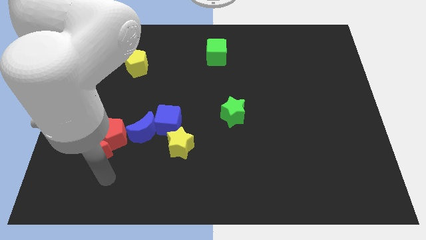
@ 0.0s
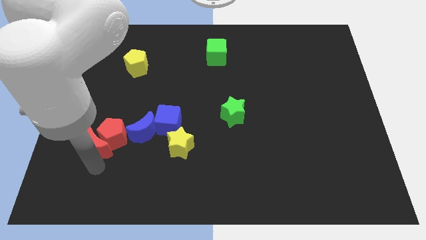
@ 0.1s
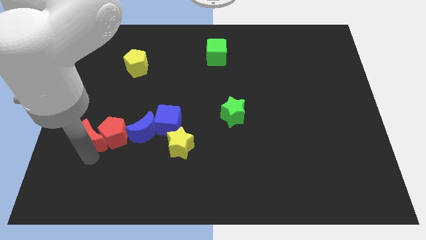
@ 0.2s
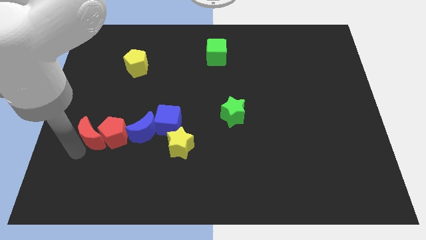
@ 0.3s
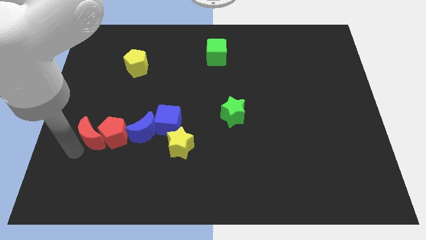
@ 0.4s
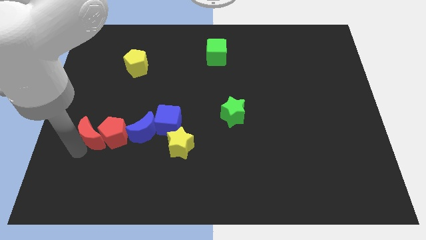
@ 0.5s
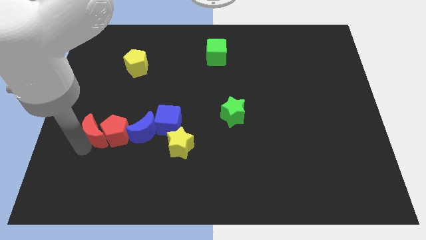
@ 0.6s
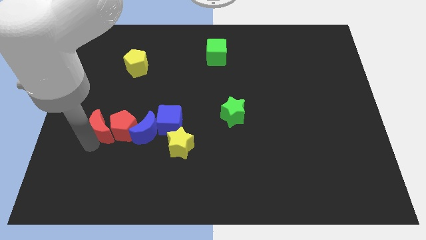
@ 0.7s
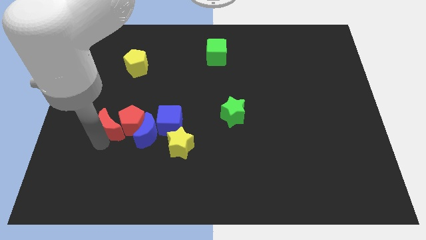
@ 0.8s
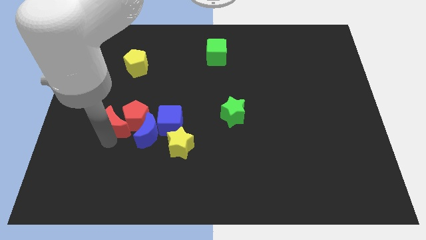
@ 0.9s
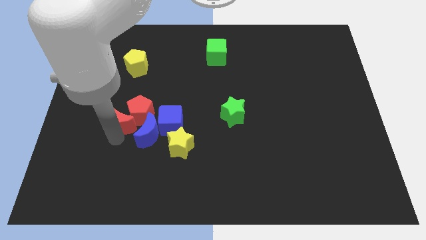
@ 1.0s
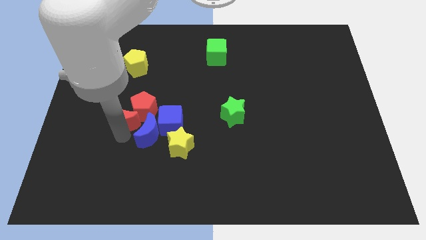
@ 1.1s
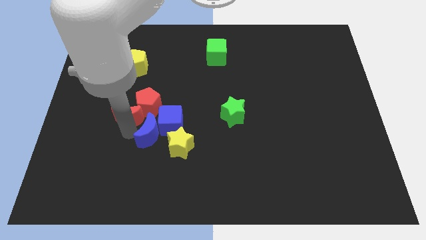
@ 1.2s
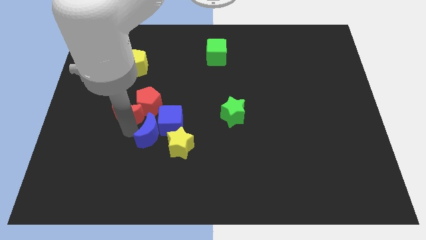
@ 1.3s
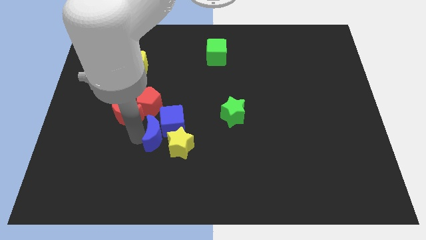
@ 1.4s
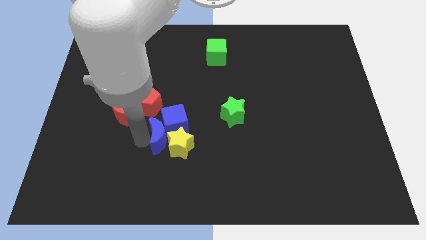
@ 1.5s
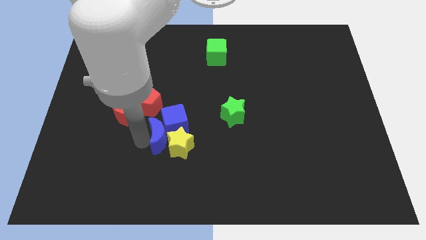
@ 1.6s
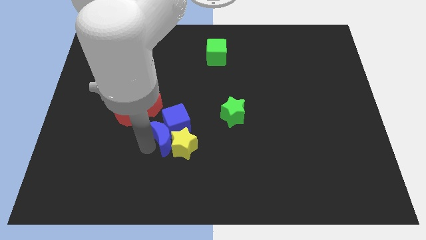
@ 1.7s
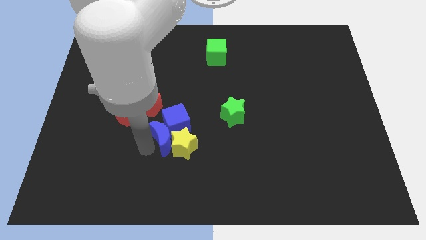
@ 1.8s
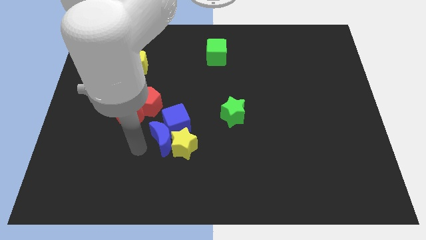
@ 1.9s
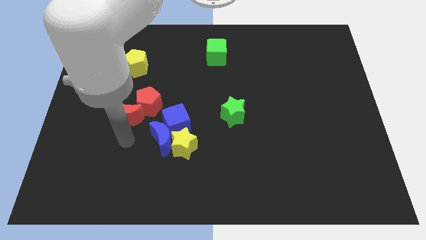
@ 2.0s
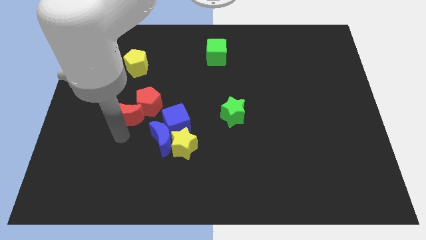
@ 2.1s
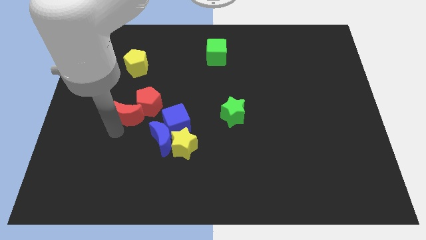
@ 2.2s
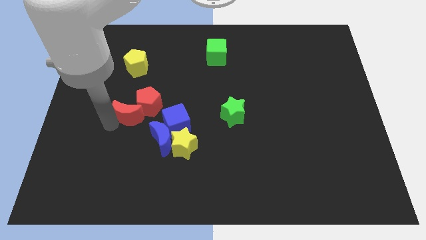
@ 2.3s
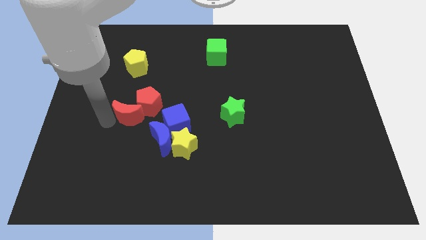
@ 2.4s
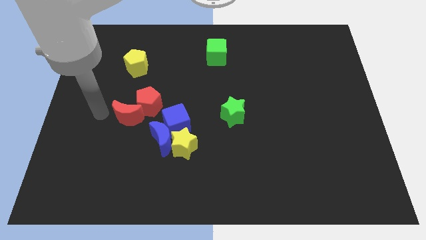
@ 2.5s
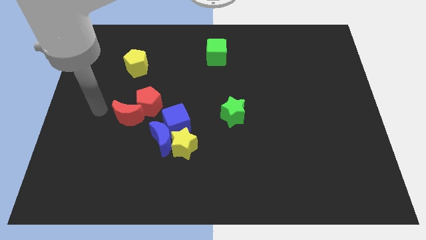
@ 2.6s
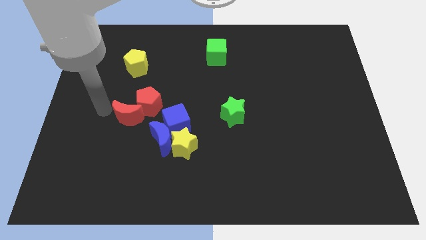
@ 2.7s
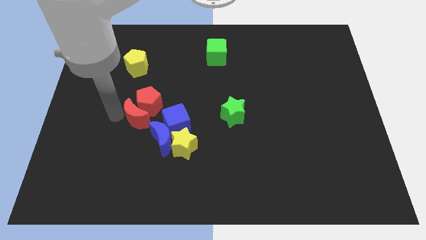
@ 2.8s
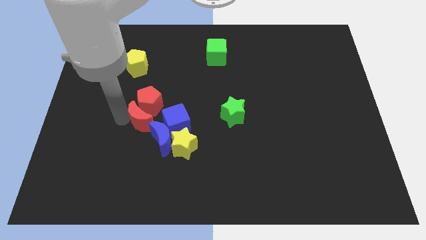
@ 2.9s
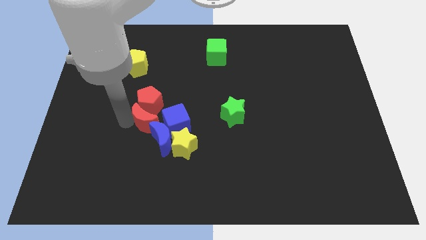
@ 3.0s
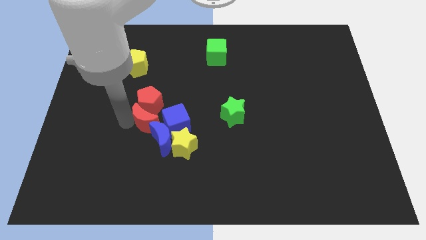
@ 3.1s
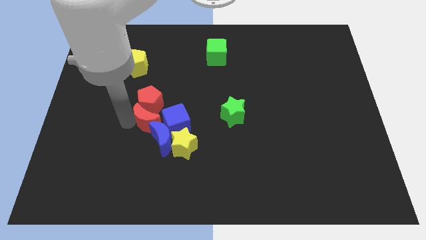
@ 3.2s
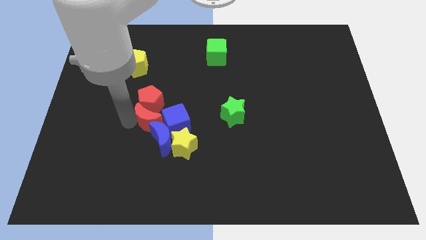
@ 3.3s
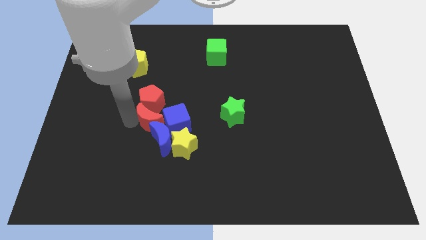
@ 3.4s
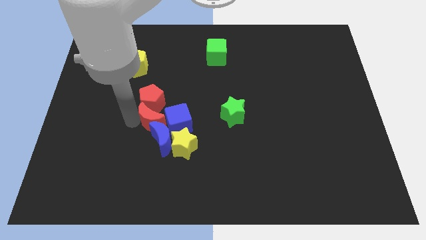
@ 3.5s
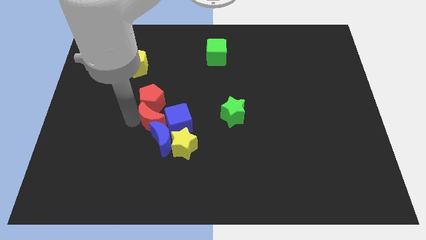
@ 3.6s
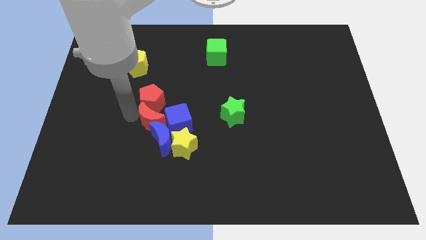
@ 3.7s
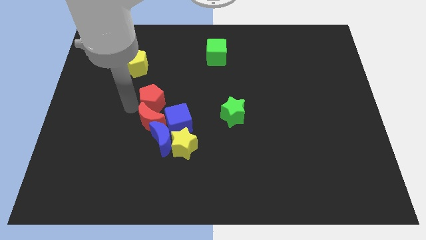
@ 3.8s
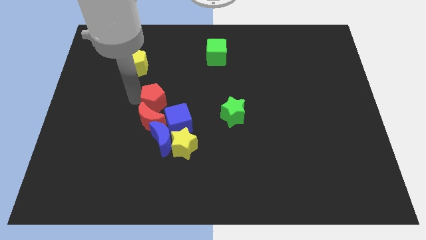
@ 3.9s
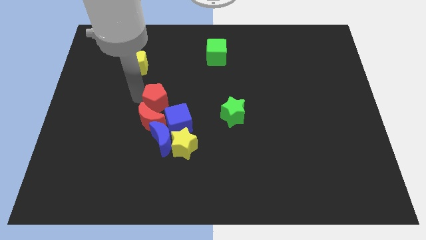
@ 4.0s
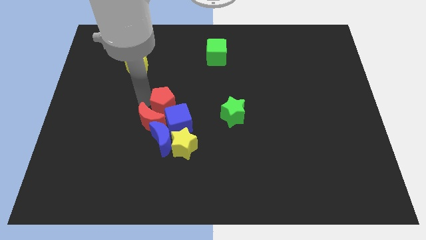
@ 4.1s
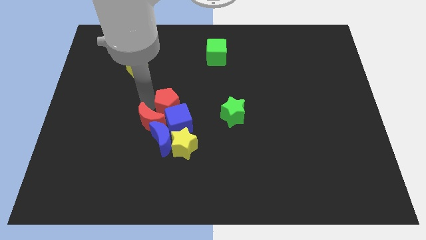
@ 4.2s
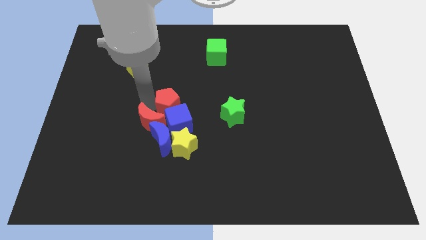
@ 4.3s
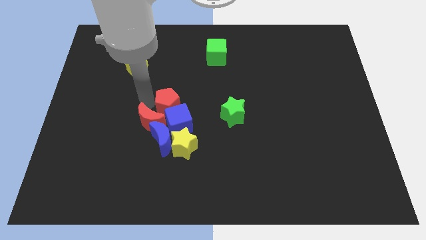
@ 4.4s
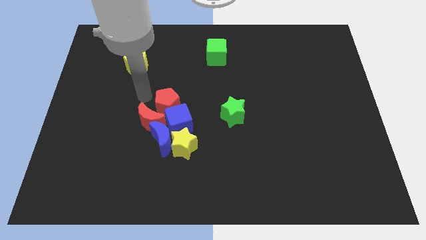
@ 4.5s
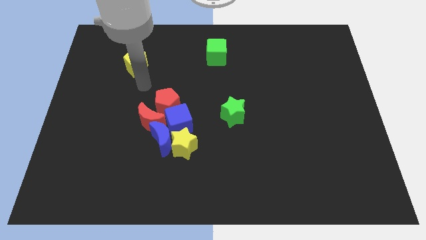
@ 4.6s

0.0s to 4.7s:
push both the red blocks into the both blue blocks

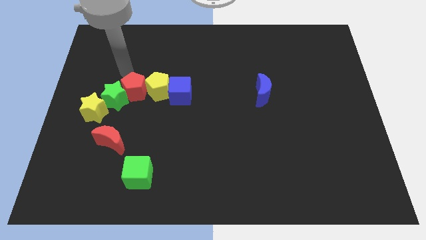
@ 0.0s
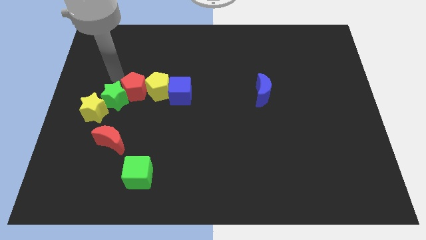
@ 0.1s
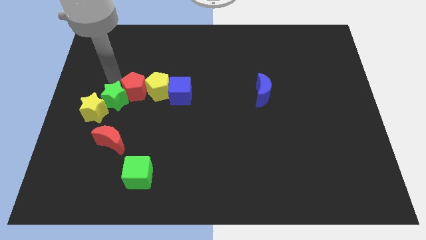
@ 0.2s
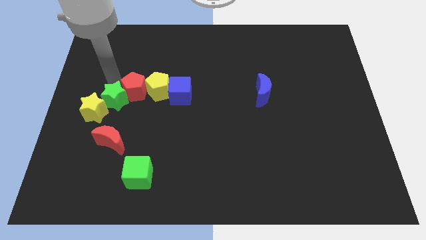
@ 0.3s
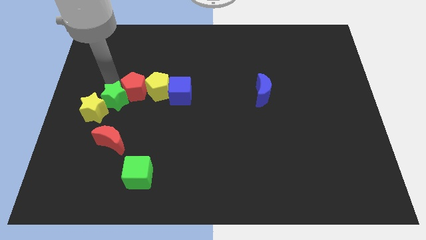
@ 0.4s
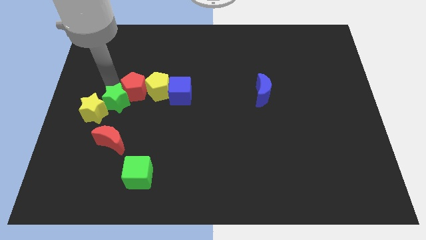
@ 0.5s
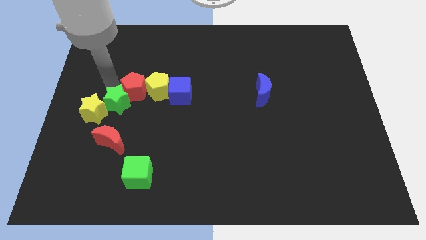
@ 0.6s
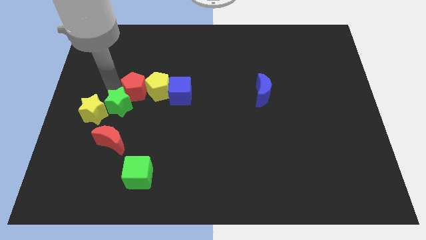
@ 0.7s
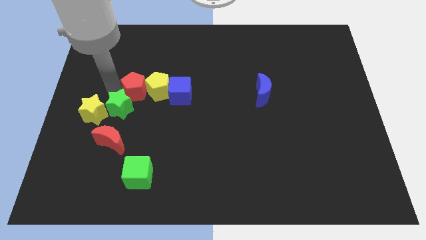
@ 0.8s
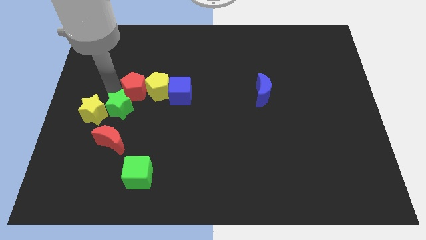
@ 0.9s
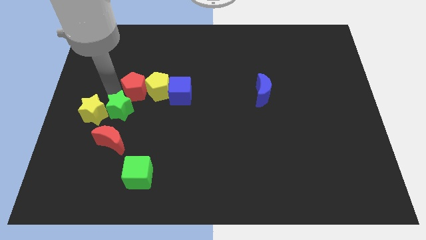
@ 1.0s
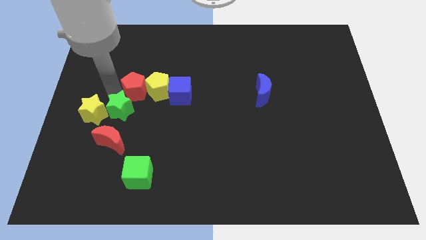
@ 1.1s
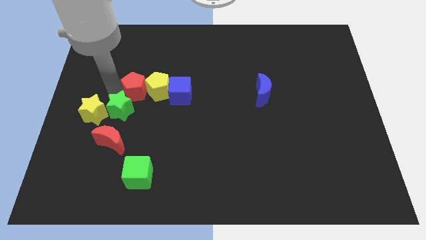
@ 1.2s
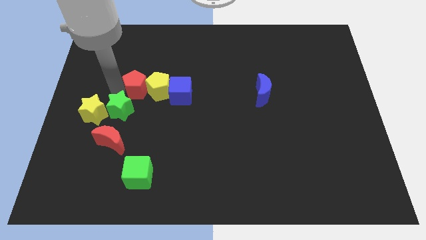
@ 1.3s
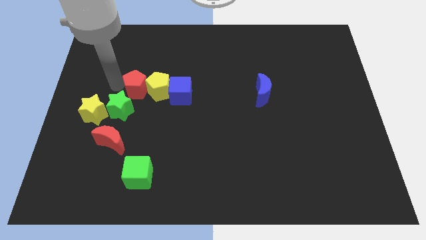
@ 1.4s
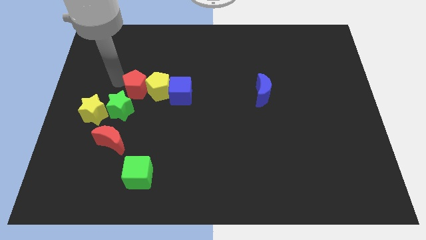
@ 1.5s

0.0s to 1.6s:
push the green star slightly towards downward

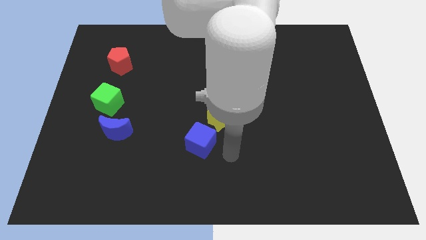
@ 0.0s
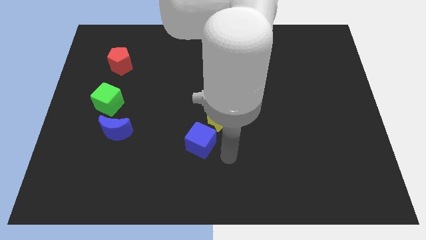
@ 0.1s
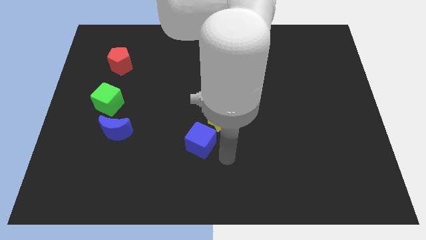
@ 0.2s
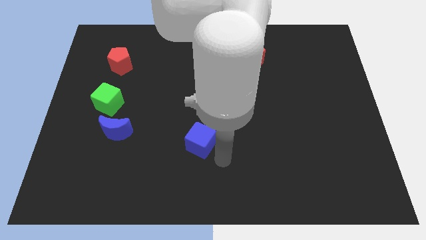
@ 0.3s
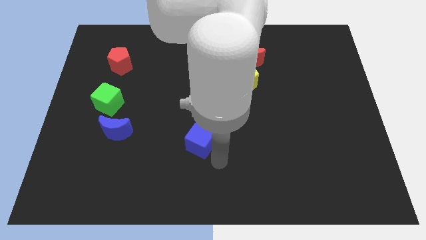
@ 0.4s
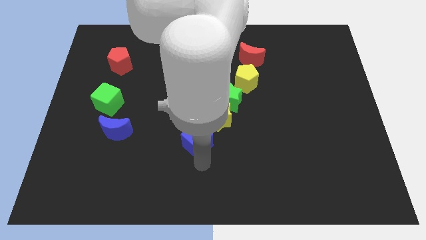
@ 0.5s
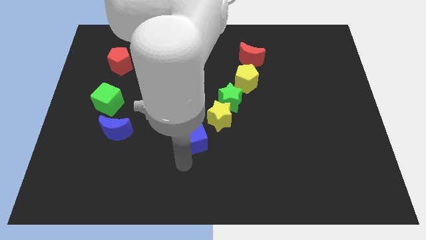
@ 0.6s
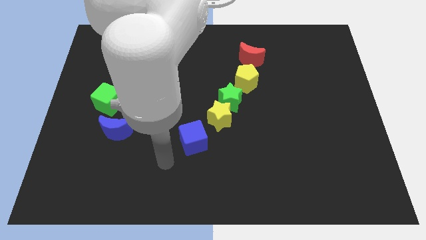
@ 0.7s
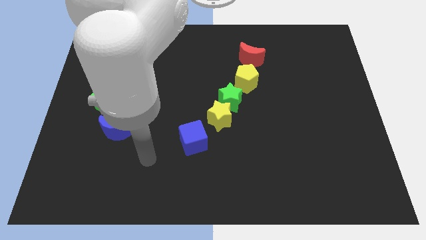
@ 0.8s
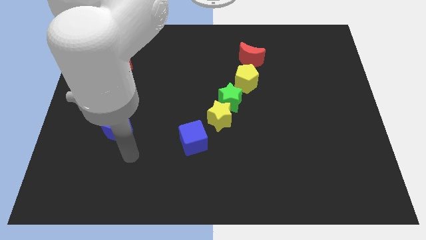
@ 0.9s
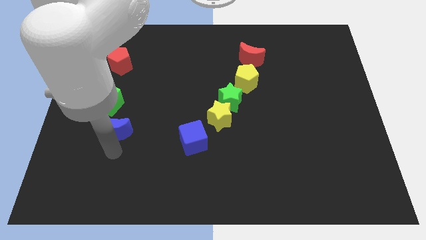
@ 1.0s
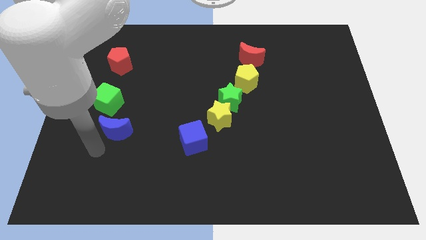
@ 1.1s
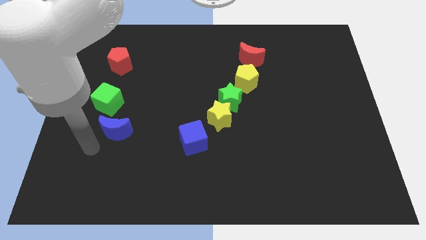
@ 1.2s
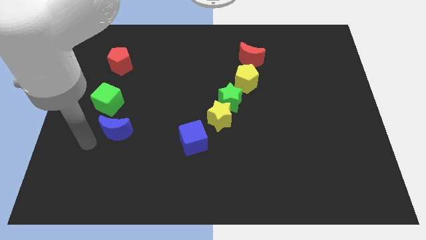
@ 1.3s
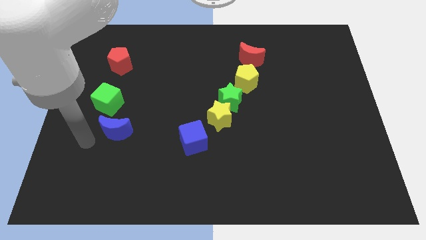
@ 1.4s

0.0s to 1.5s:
slightly push the blue cube to the center of the board

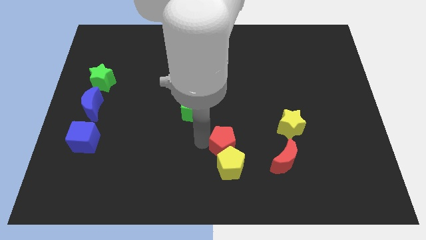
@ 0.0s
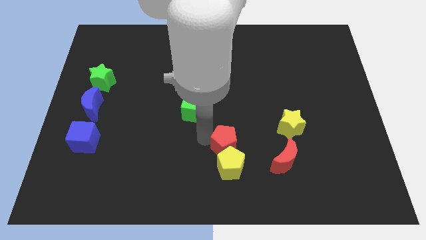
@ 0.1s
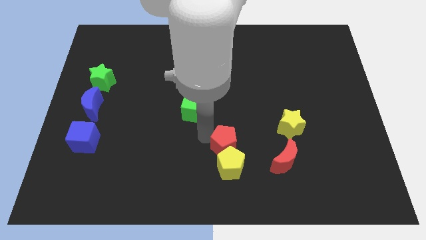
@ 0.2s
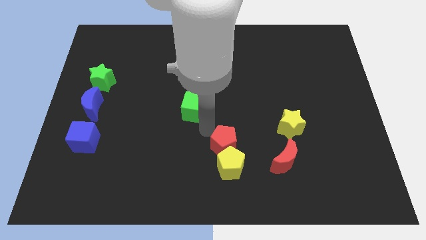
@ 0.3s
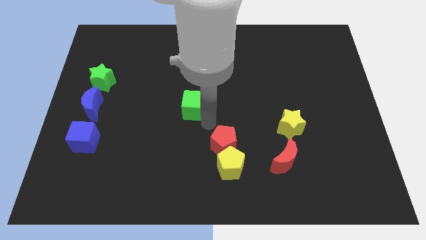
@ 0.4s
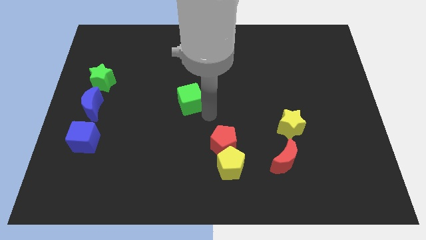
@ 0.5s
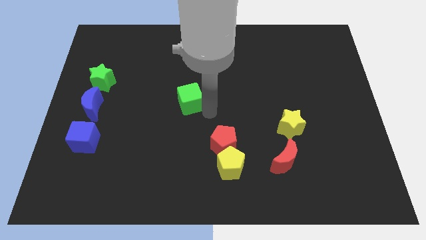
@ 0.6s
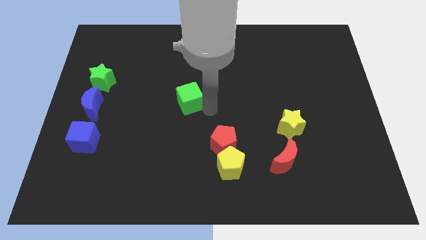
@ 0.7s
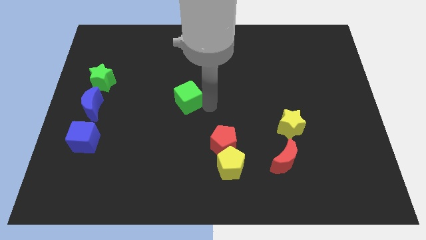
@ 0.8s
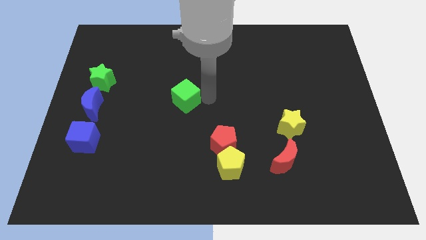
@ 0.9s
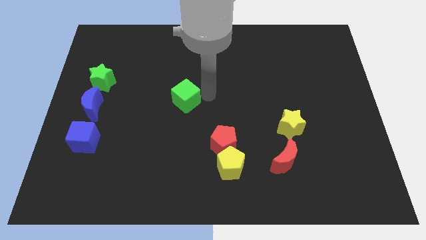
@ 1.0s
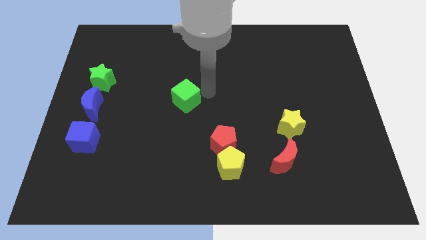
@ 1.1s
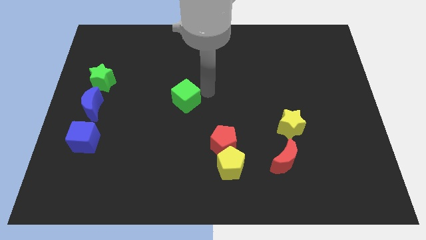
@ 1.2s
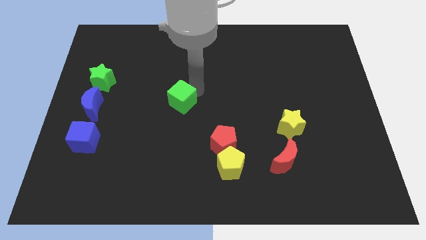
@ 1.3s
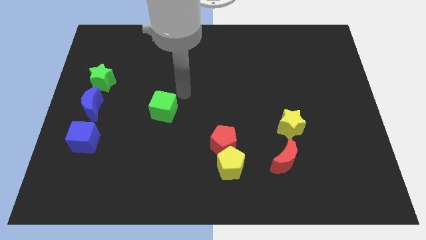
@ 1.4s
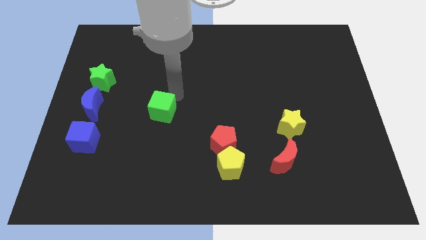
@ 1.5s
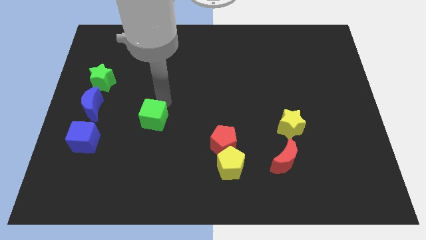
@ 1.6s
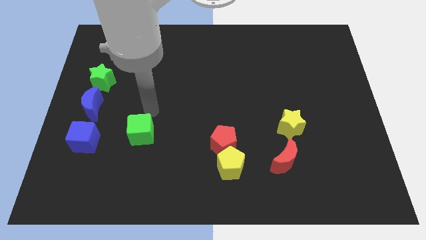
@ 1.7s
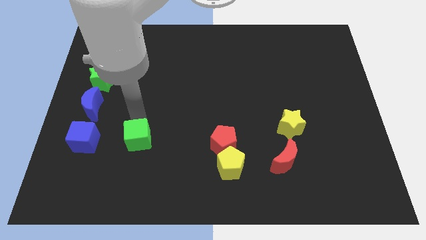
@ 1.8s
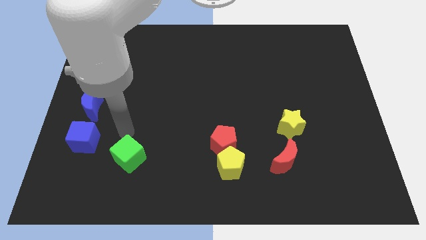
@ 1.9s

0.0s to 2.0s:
move the green cube to the horizontal right side of the blue cube
